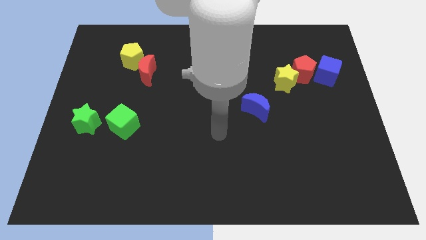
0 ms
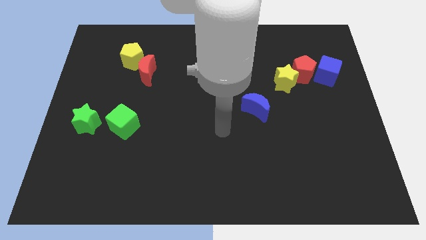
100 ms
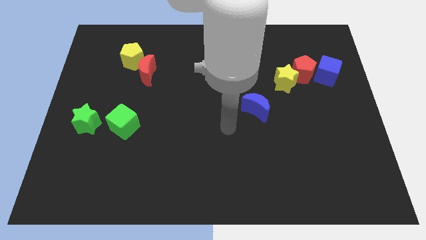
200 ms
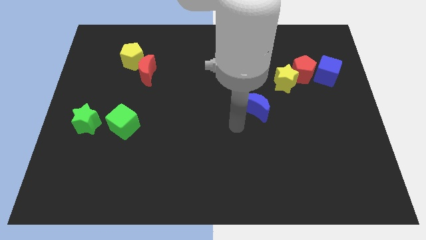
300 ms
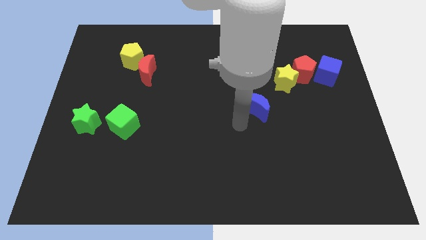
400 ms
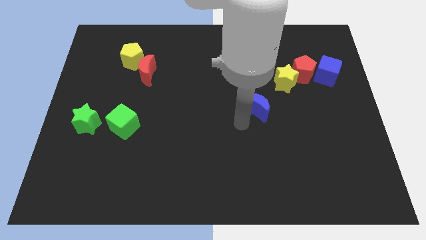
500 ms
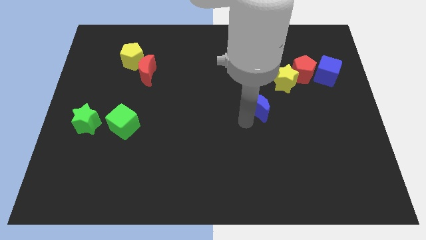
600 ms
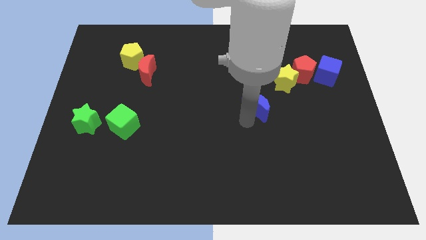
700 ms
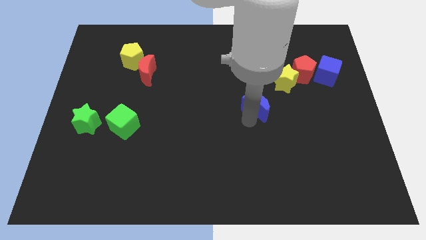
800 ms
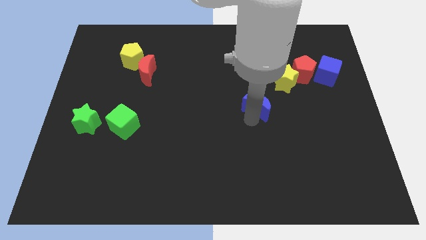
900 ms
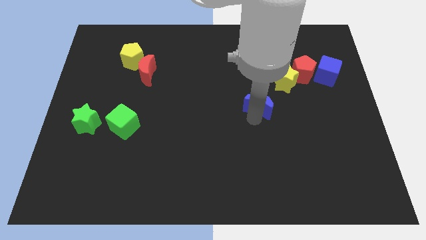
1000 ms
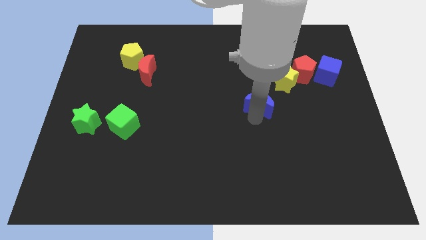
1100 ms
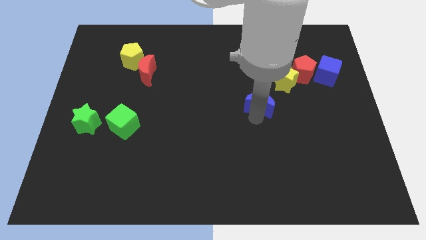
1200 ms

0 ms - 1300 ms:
touch the blue moon

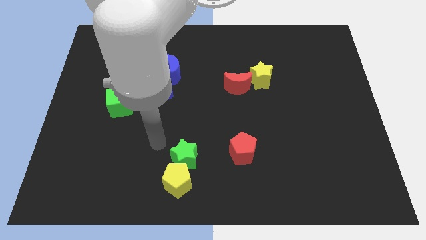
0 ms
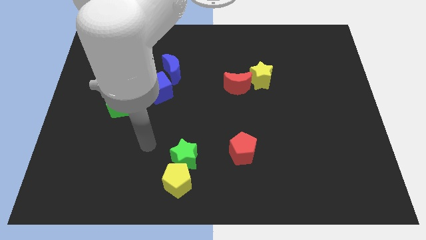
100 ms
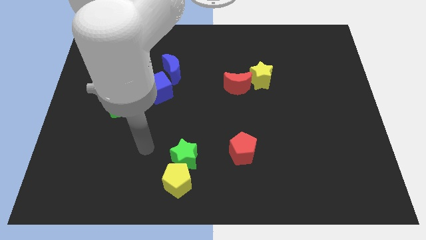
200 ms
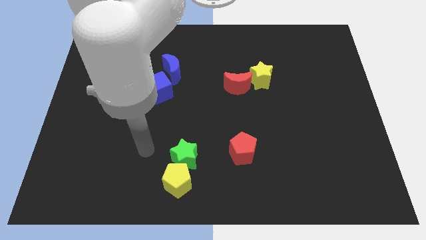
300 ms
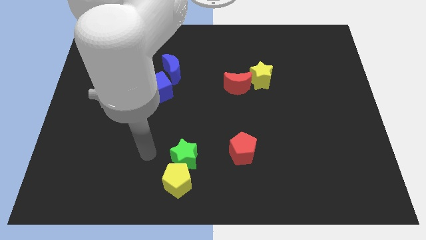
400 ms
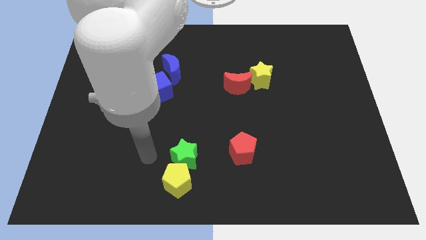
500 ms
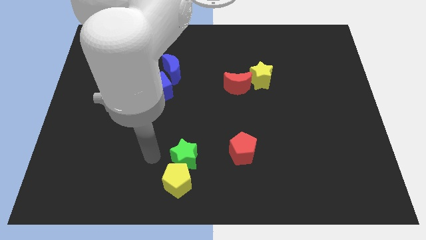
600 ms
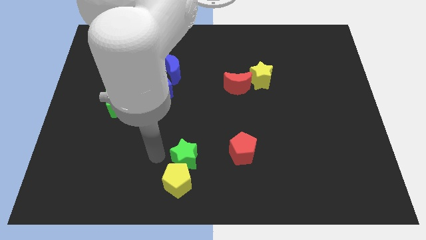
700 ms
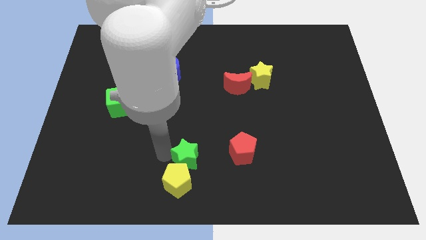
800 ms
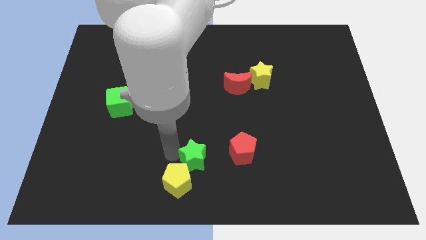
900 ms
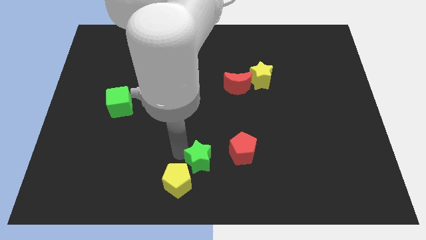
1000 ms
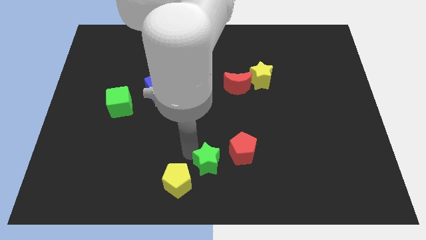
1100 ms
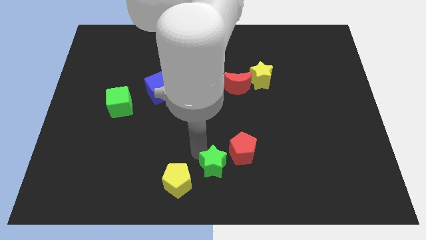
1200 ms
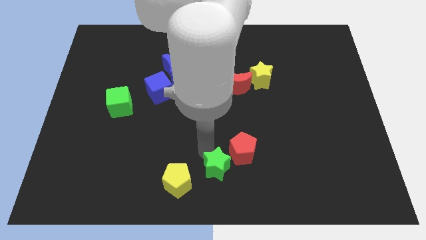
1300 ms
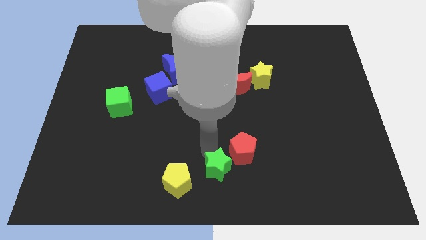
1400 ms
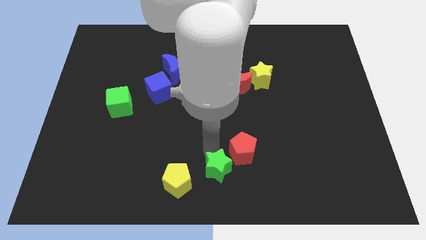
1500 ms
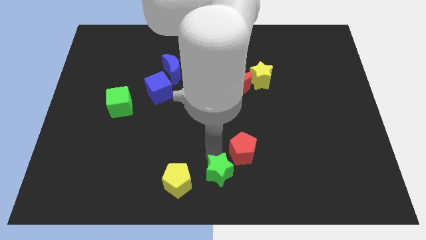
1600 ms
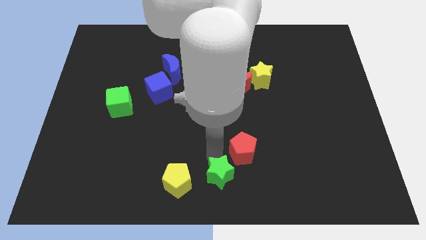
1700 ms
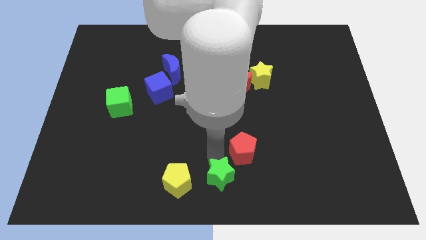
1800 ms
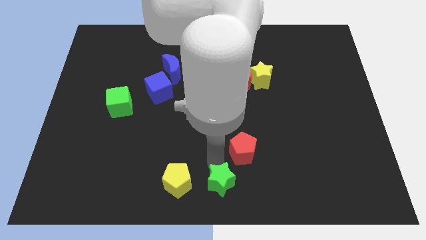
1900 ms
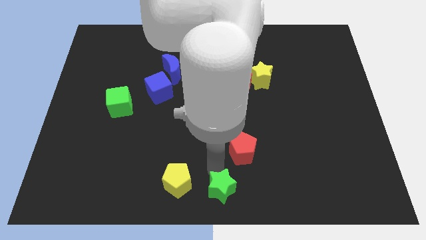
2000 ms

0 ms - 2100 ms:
move the green star to the right of the yellow pentagon

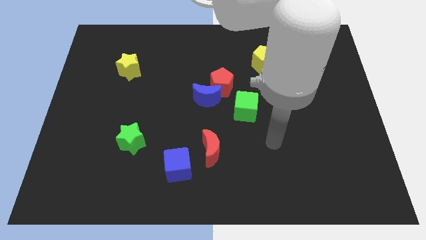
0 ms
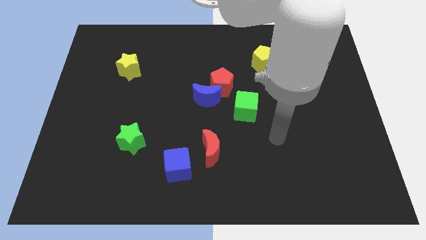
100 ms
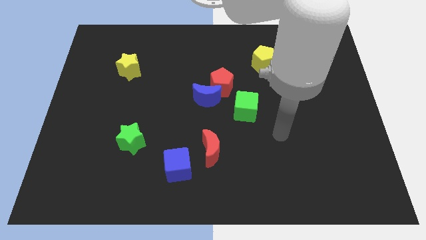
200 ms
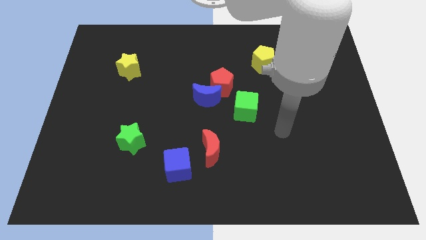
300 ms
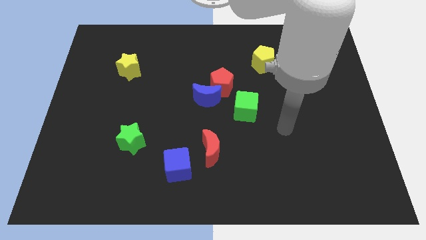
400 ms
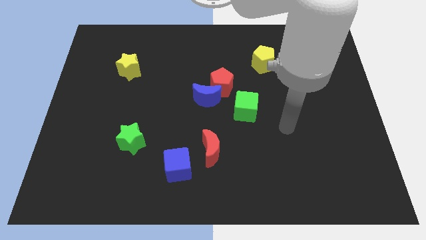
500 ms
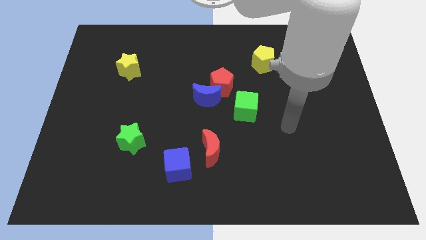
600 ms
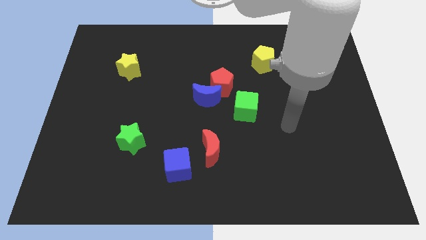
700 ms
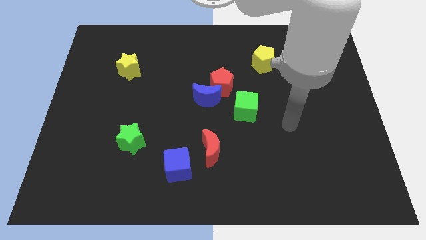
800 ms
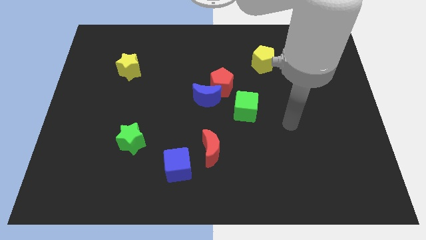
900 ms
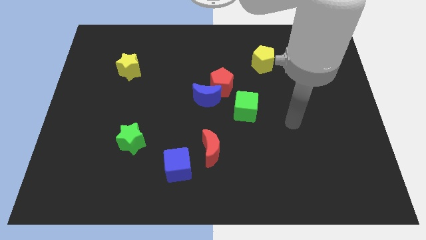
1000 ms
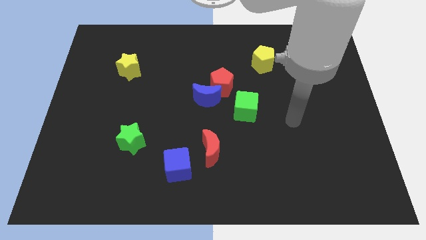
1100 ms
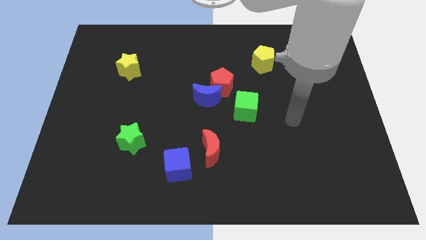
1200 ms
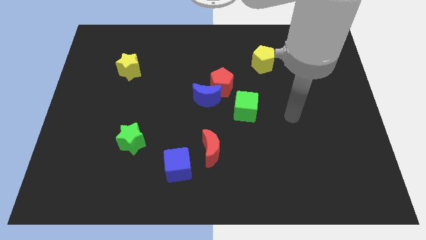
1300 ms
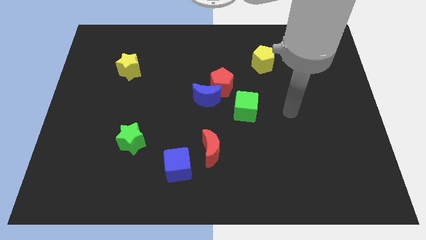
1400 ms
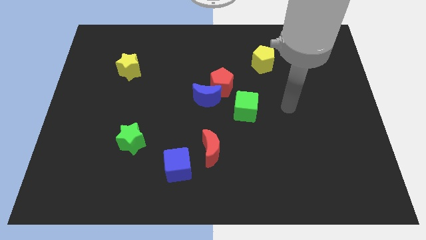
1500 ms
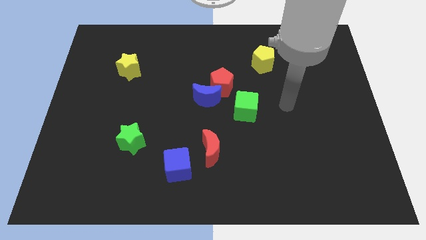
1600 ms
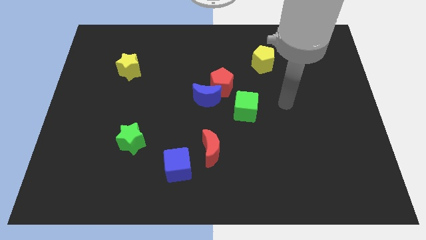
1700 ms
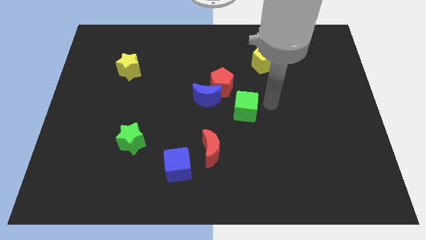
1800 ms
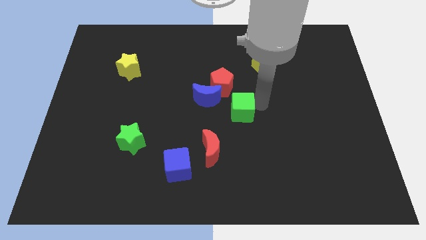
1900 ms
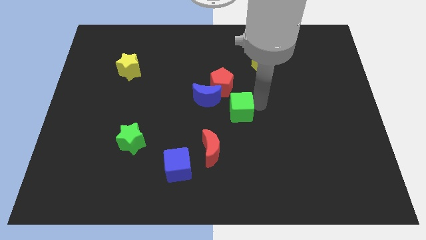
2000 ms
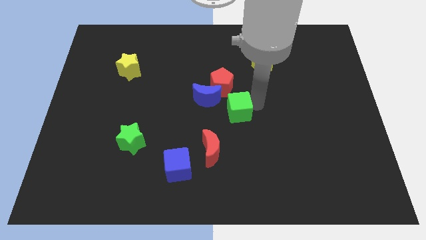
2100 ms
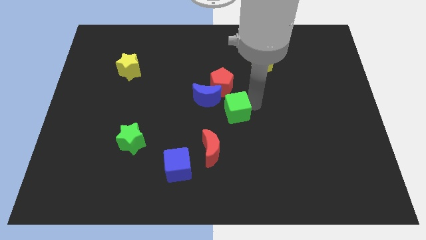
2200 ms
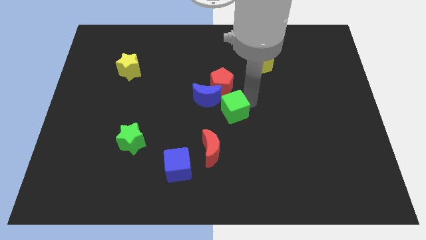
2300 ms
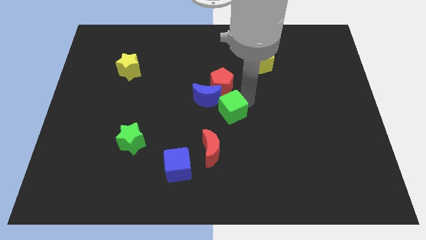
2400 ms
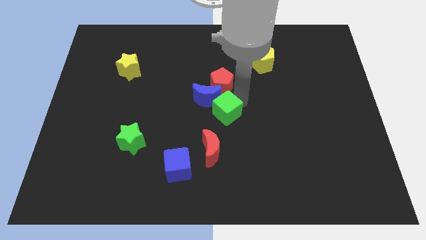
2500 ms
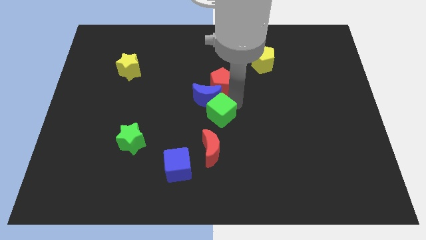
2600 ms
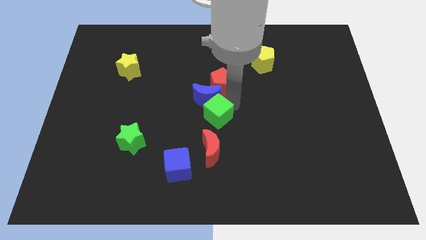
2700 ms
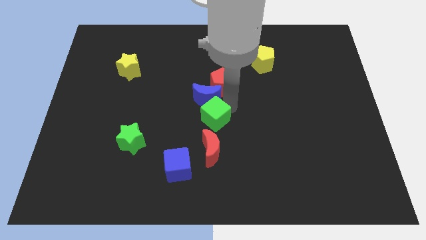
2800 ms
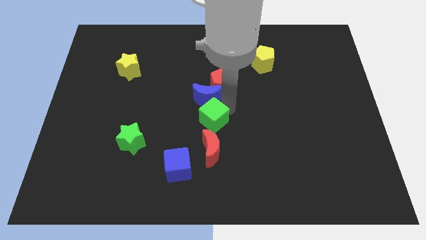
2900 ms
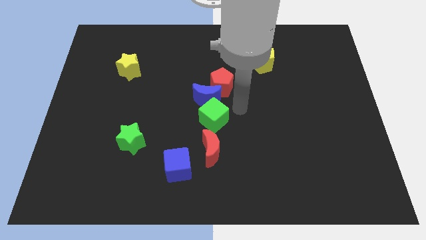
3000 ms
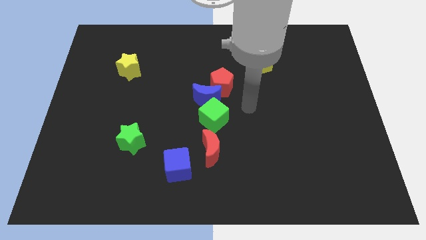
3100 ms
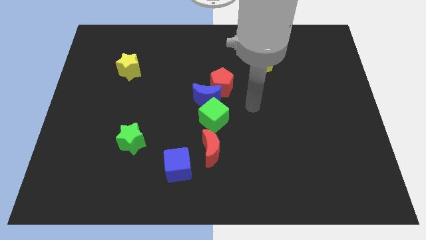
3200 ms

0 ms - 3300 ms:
place green cube between blue and red crescent

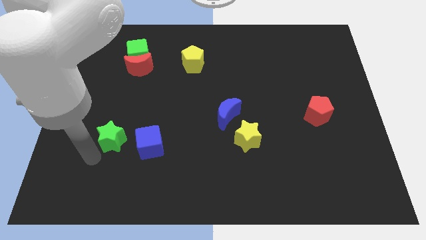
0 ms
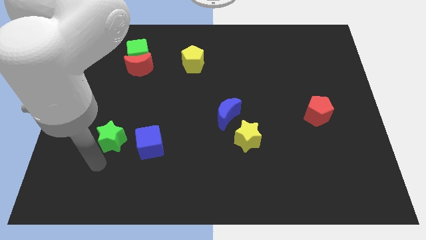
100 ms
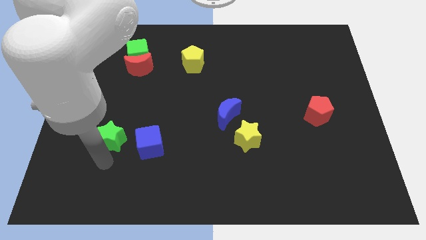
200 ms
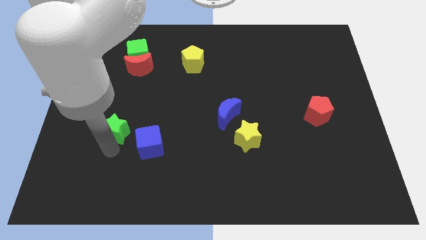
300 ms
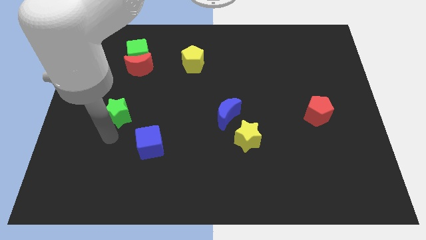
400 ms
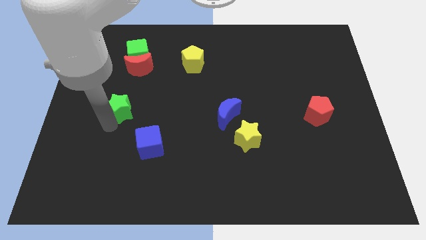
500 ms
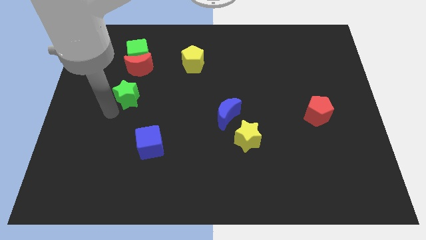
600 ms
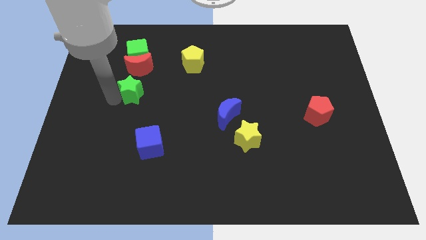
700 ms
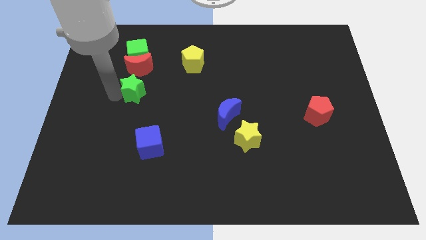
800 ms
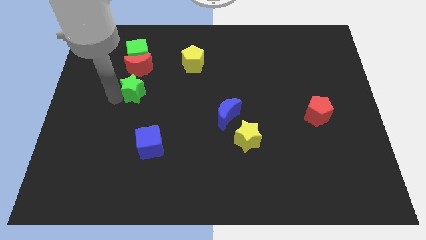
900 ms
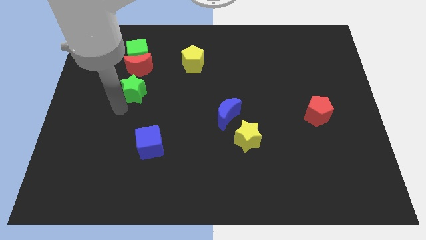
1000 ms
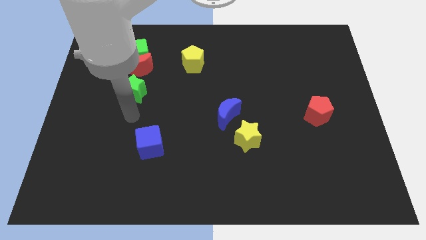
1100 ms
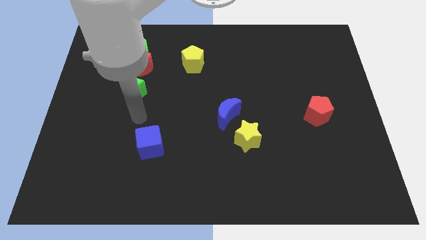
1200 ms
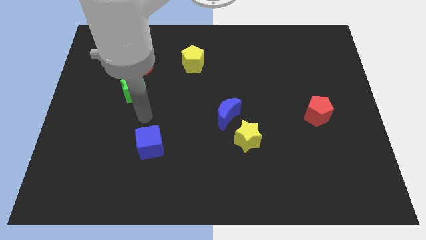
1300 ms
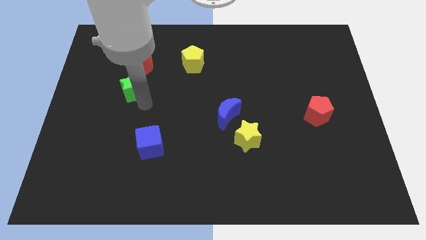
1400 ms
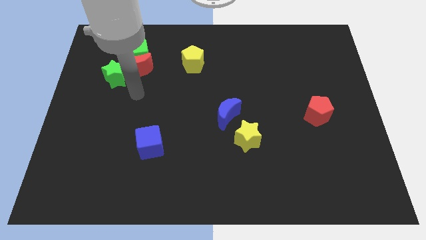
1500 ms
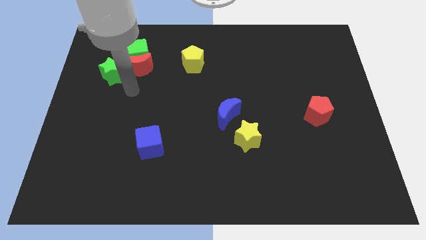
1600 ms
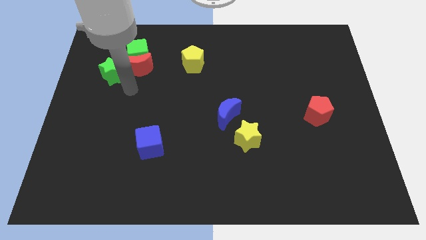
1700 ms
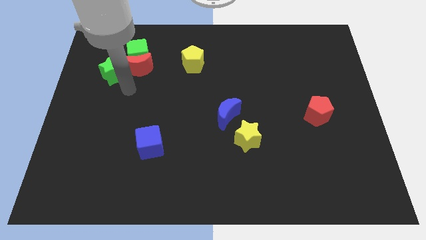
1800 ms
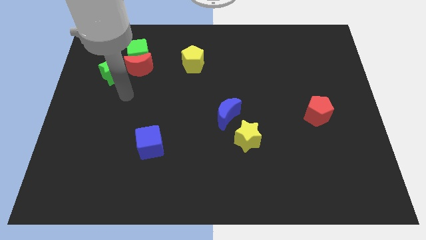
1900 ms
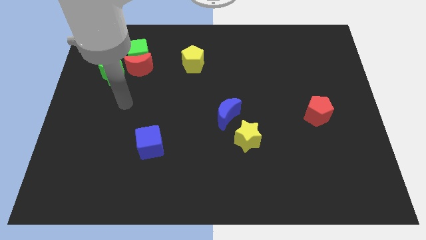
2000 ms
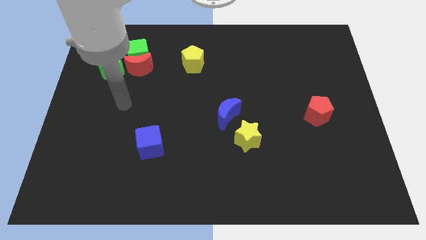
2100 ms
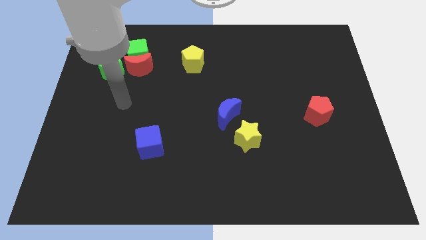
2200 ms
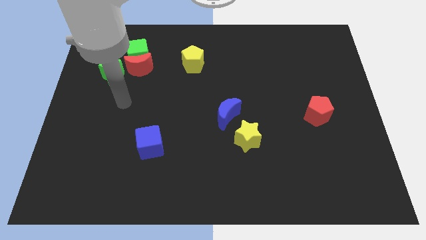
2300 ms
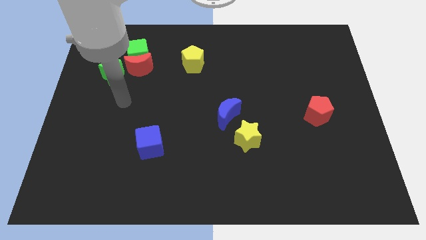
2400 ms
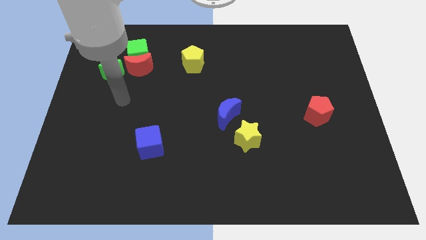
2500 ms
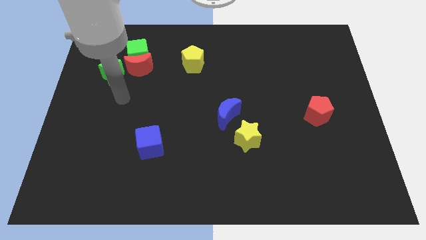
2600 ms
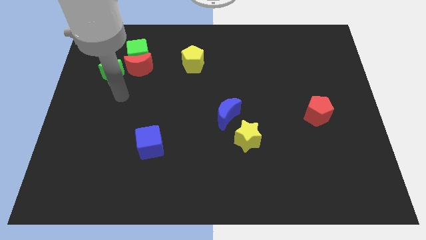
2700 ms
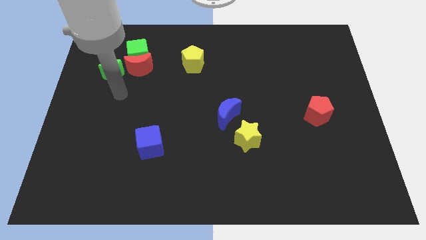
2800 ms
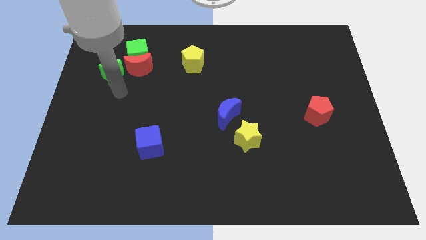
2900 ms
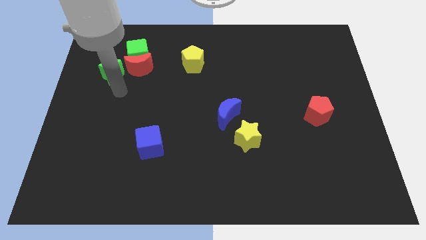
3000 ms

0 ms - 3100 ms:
push the green star to the left side of the red crescent
